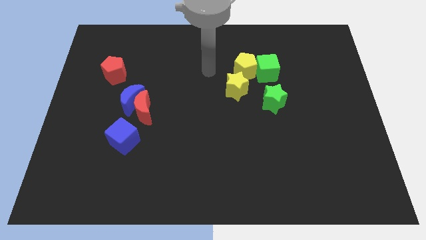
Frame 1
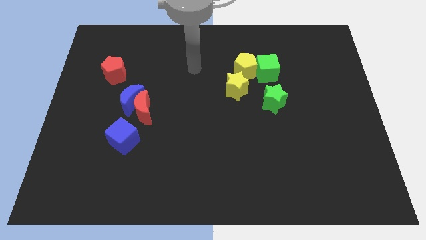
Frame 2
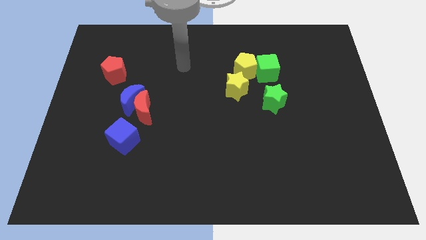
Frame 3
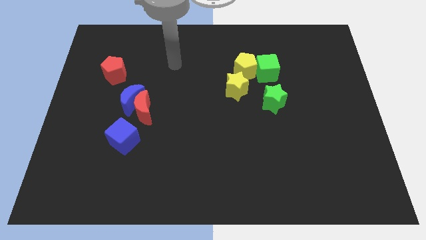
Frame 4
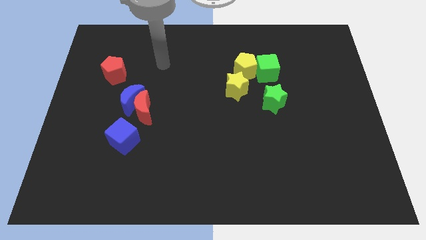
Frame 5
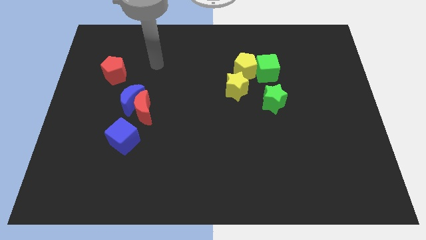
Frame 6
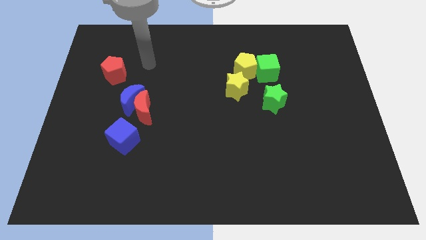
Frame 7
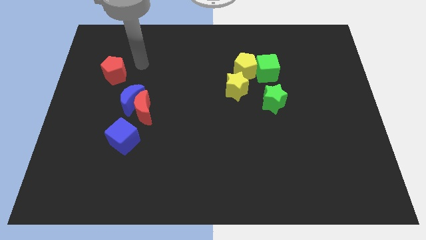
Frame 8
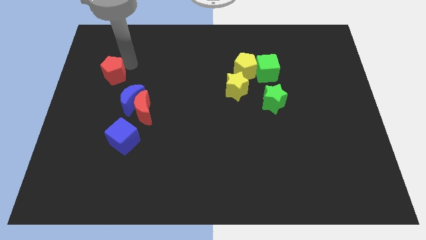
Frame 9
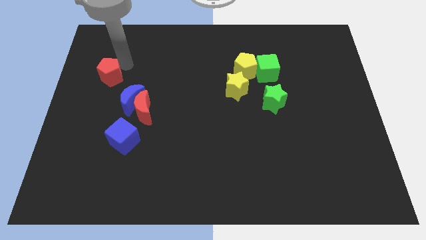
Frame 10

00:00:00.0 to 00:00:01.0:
move arm towards red pentagon

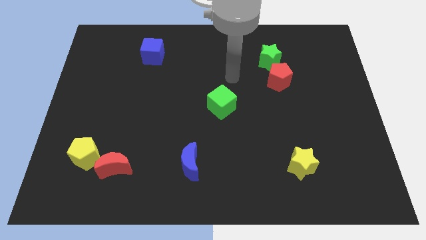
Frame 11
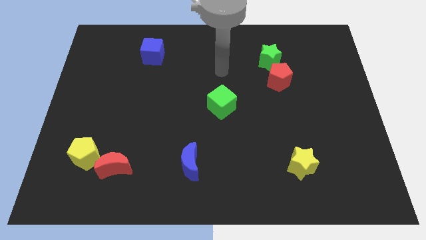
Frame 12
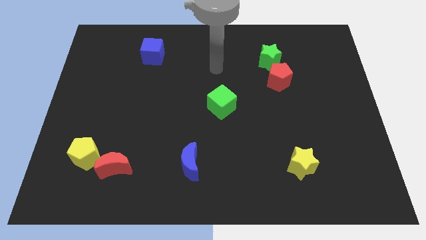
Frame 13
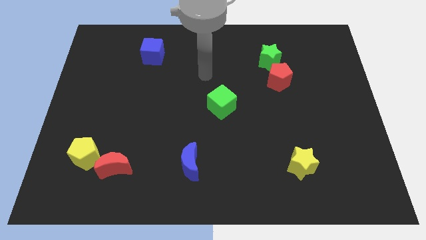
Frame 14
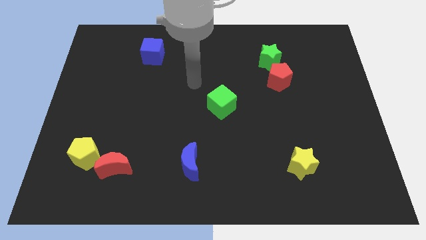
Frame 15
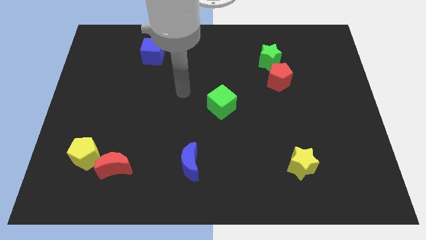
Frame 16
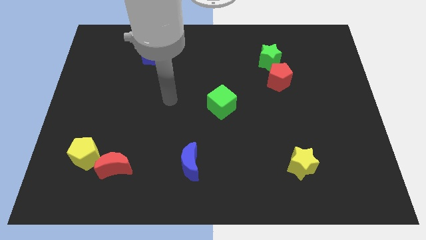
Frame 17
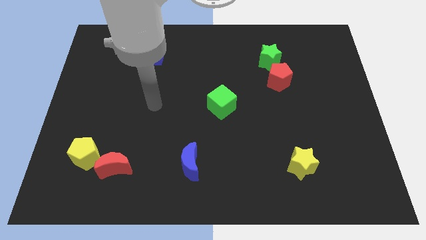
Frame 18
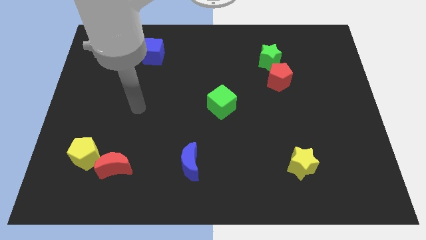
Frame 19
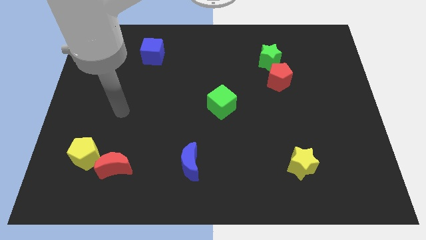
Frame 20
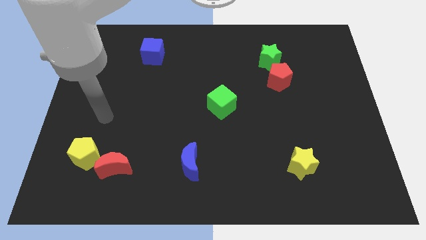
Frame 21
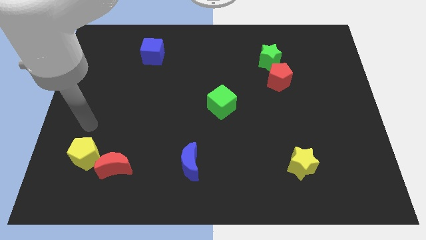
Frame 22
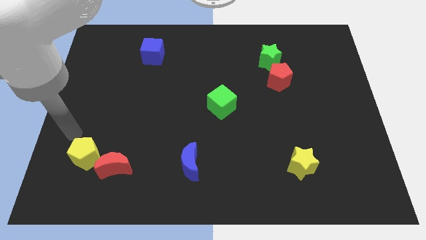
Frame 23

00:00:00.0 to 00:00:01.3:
go to the top side of the yellow pentagon

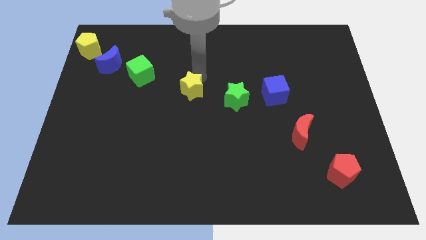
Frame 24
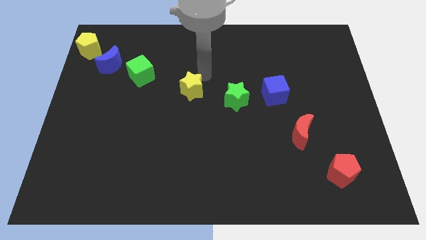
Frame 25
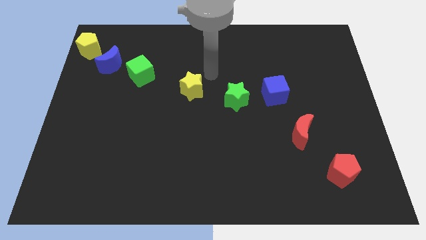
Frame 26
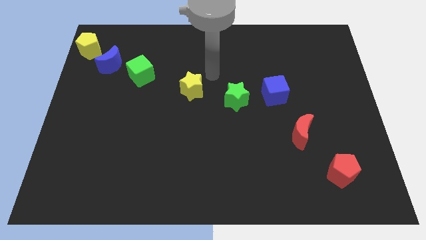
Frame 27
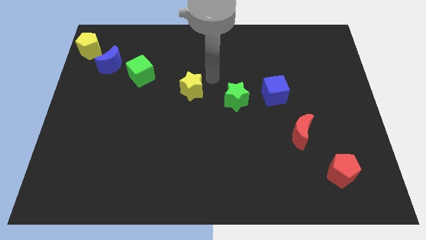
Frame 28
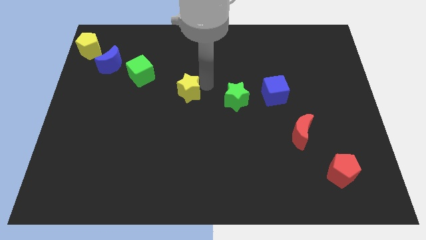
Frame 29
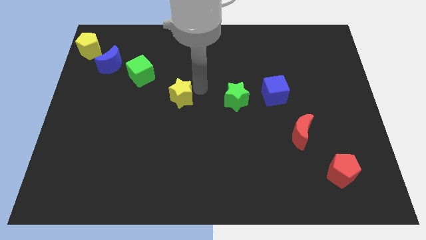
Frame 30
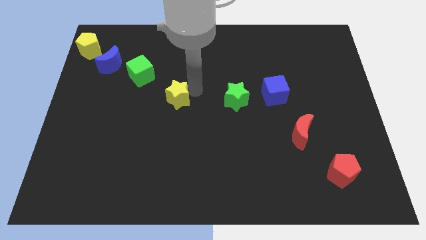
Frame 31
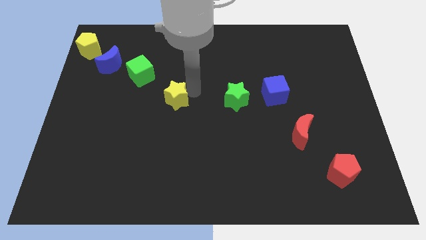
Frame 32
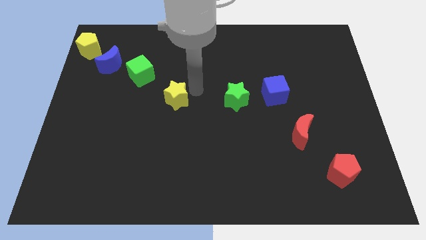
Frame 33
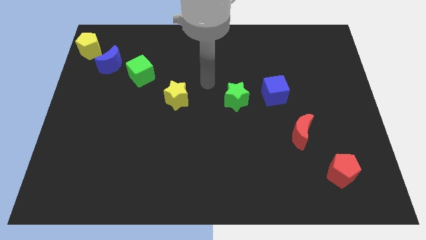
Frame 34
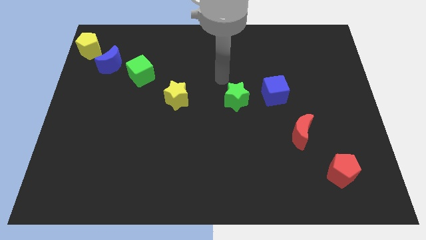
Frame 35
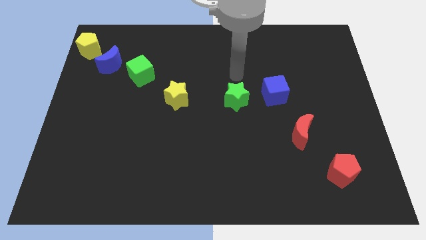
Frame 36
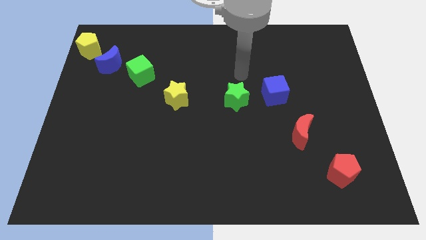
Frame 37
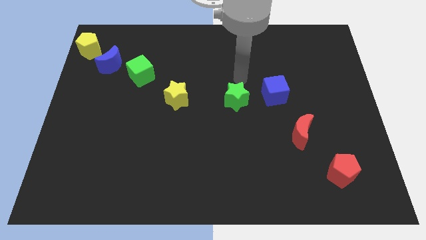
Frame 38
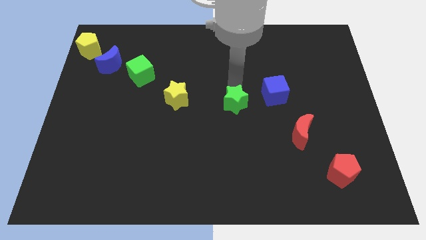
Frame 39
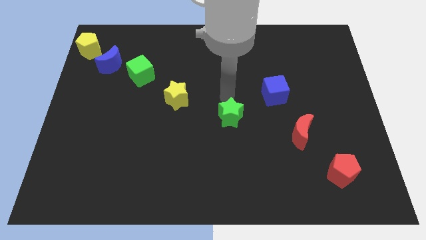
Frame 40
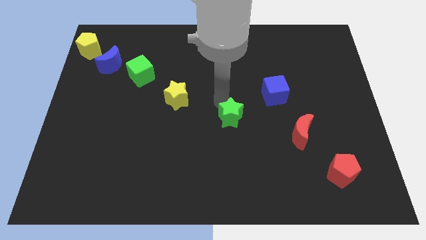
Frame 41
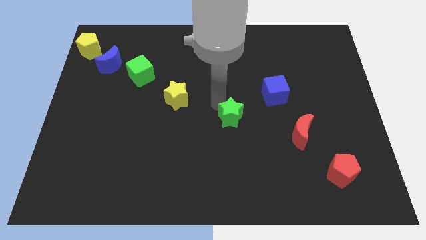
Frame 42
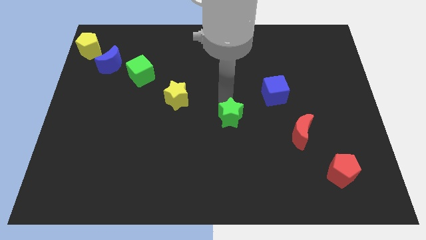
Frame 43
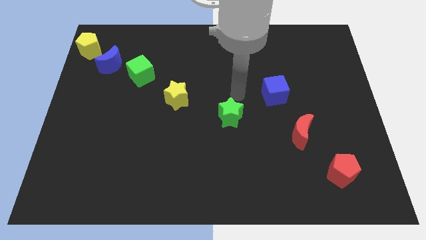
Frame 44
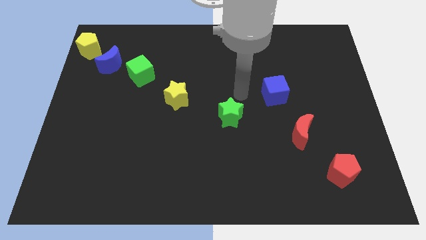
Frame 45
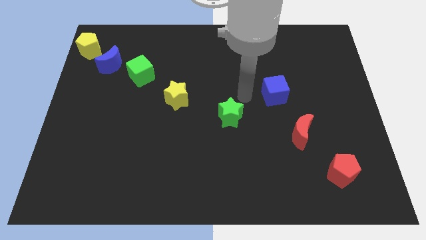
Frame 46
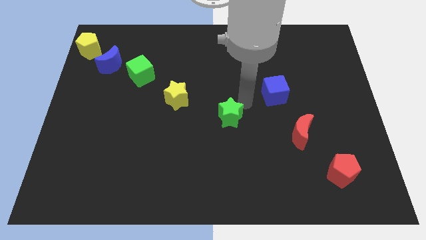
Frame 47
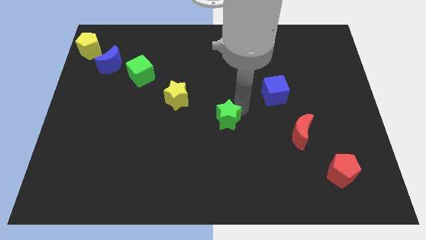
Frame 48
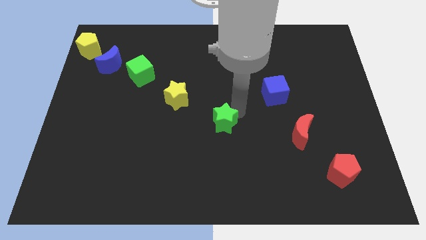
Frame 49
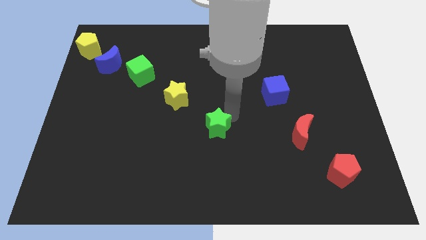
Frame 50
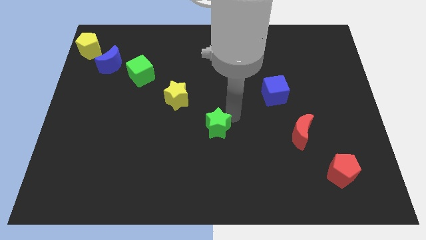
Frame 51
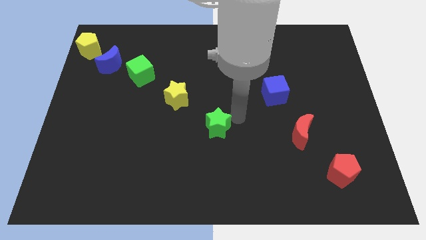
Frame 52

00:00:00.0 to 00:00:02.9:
move the green star towards down

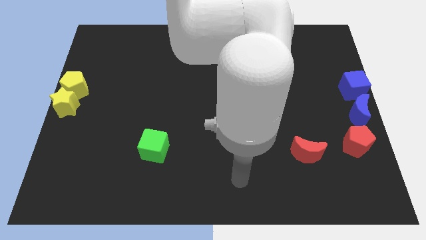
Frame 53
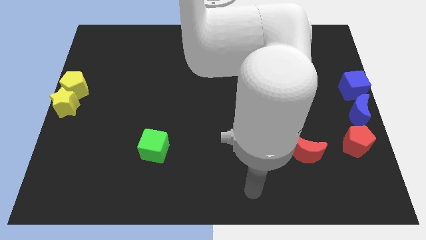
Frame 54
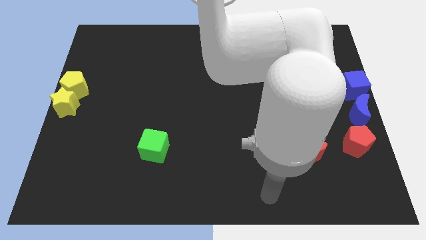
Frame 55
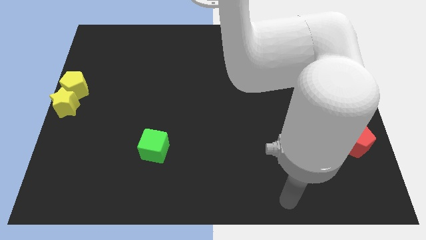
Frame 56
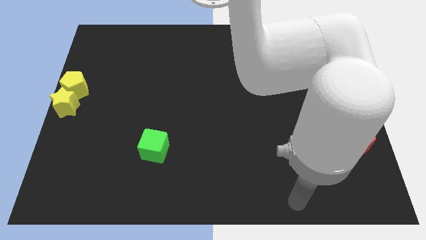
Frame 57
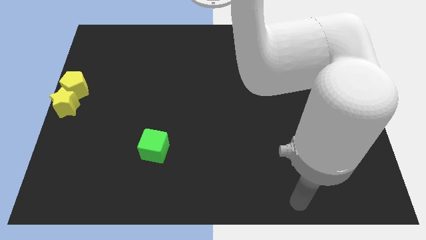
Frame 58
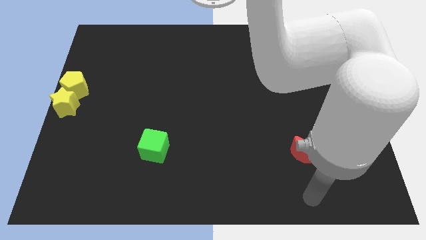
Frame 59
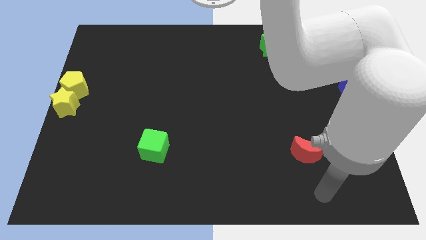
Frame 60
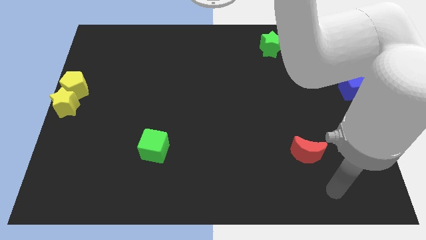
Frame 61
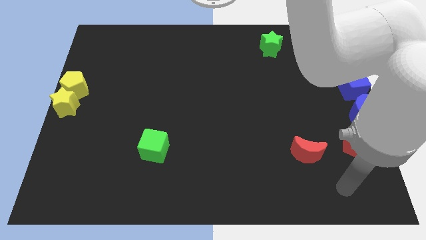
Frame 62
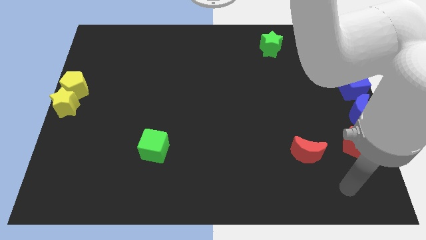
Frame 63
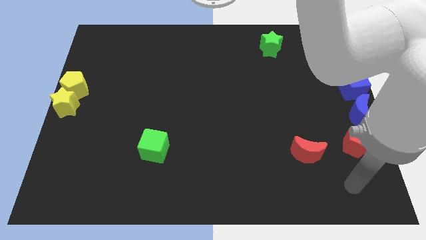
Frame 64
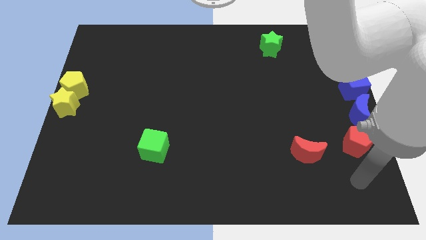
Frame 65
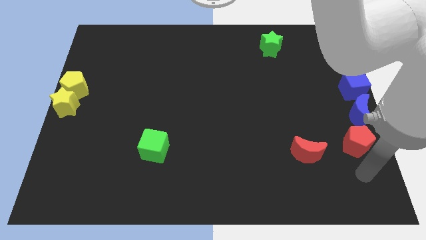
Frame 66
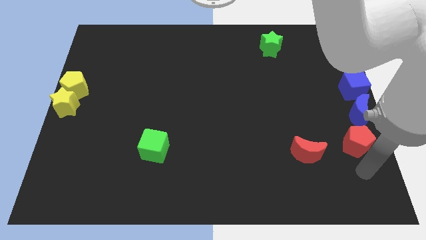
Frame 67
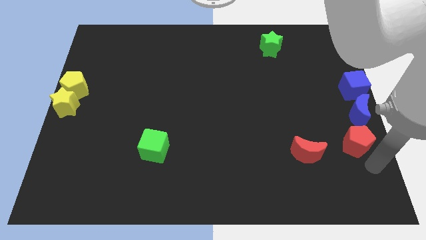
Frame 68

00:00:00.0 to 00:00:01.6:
point your arm at the bottom of the red pentagon

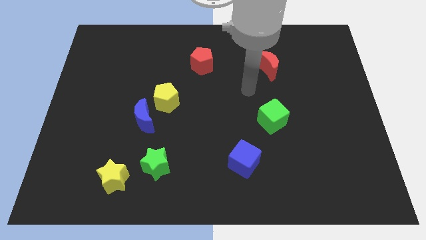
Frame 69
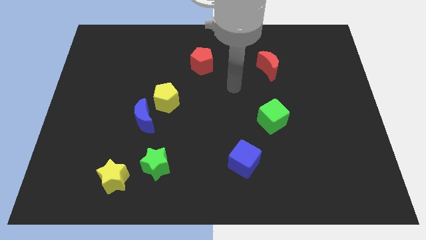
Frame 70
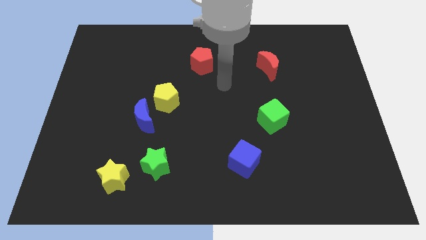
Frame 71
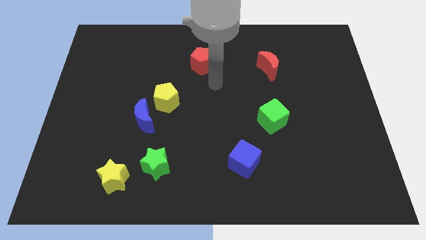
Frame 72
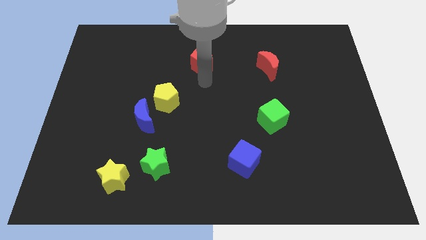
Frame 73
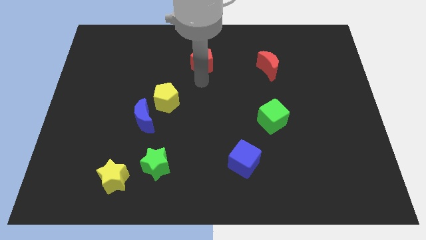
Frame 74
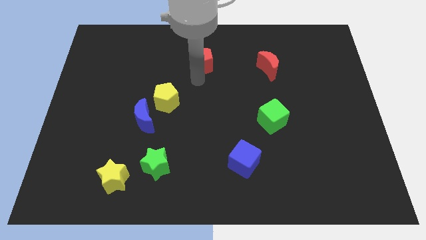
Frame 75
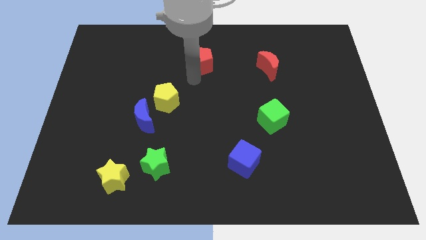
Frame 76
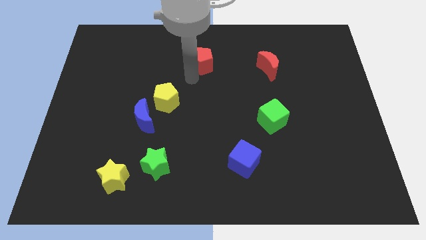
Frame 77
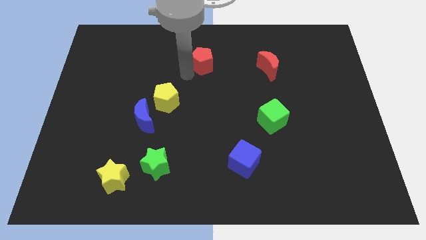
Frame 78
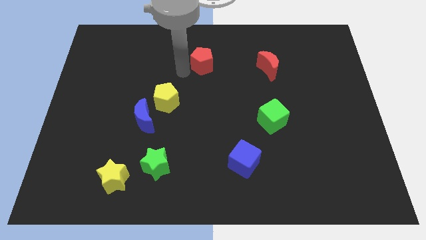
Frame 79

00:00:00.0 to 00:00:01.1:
slide your arm to the bottom left of red pentagon

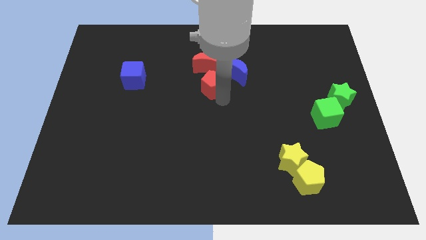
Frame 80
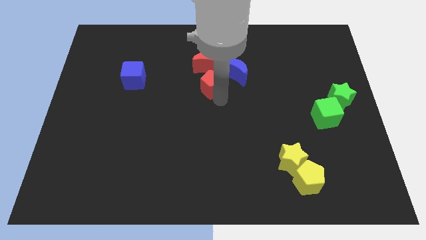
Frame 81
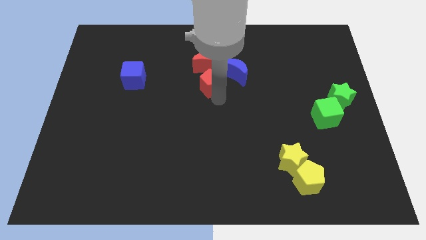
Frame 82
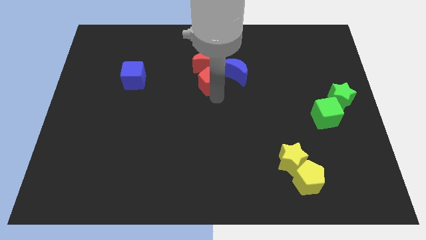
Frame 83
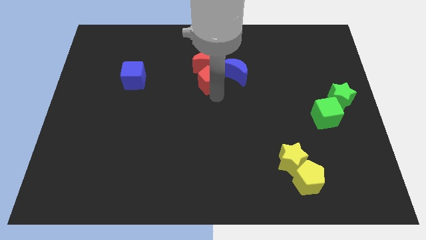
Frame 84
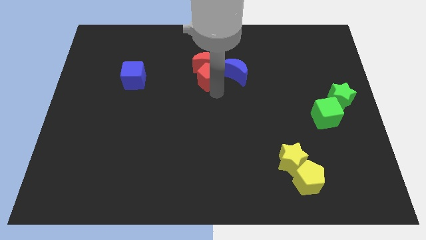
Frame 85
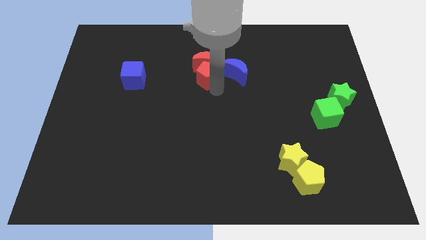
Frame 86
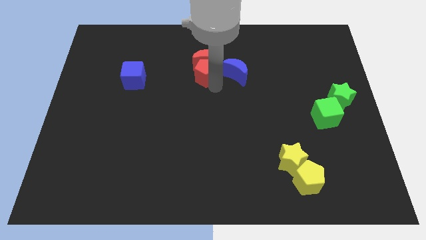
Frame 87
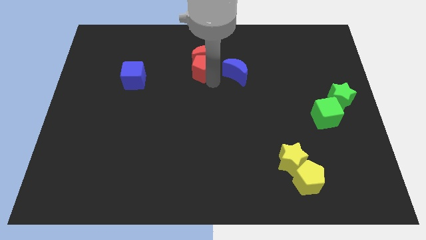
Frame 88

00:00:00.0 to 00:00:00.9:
push the red pentagon into the red crescent
